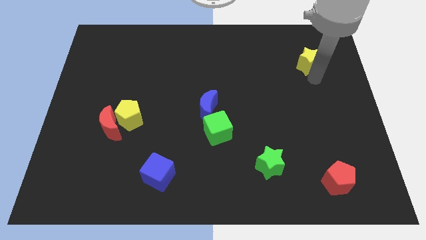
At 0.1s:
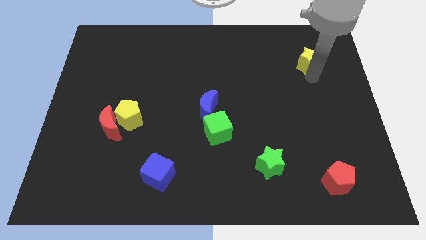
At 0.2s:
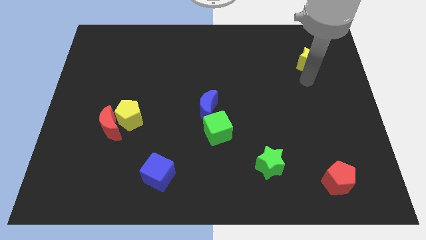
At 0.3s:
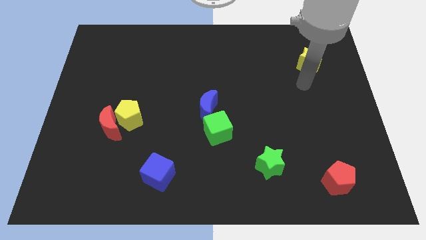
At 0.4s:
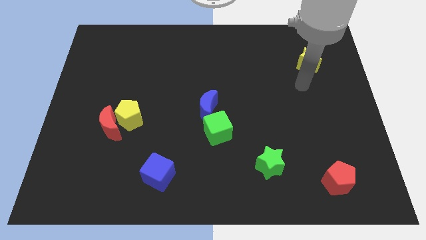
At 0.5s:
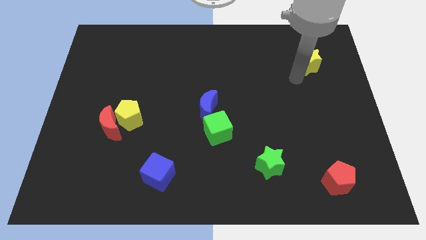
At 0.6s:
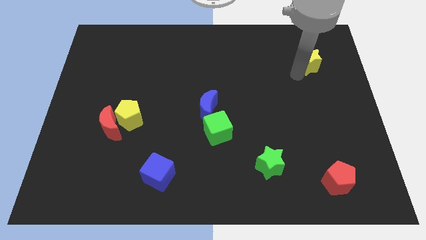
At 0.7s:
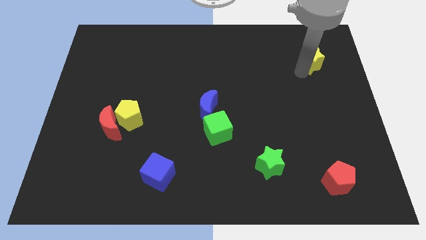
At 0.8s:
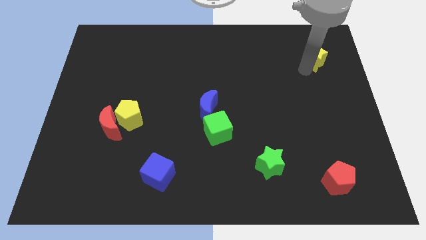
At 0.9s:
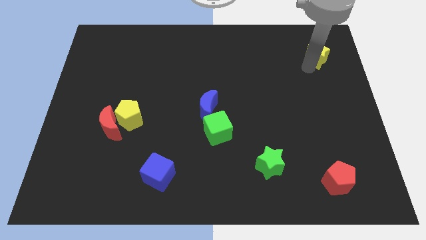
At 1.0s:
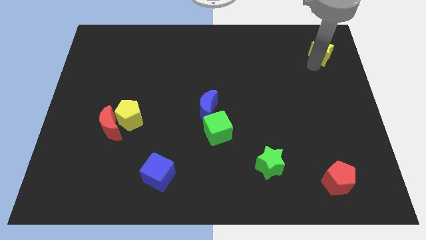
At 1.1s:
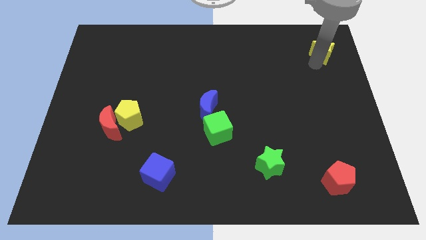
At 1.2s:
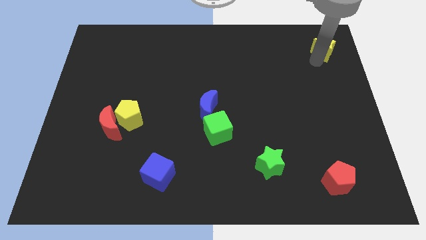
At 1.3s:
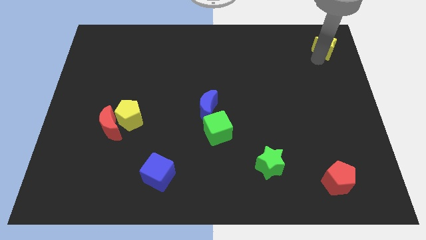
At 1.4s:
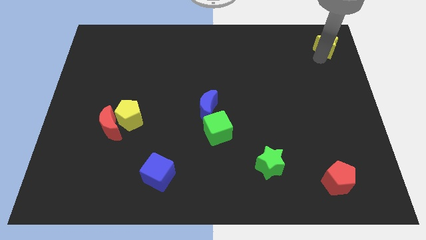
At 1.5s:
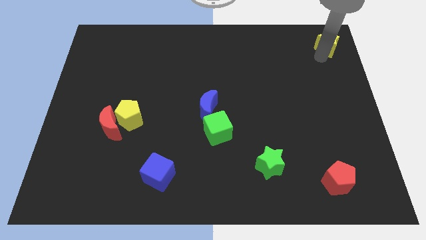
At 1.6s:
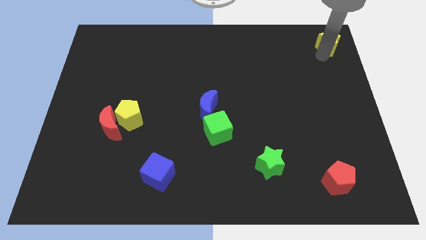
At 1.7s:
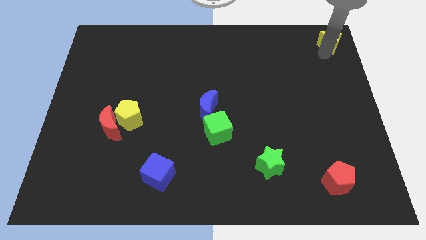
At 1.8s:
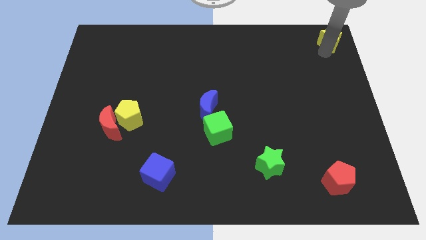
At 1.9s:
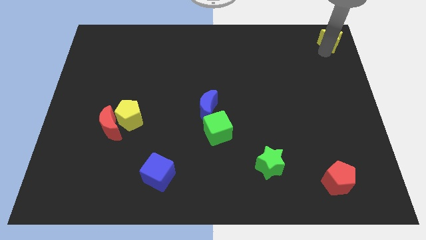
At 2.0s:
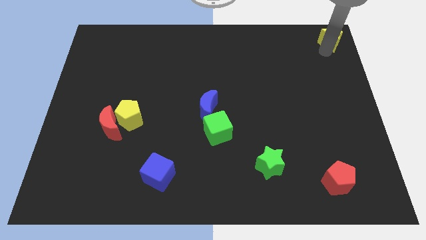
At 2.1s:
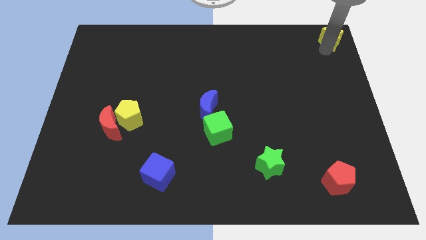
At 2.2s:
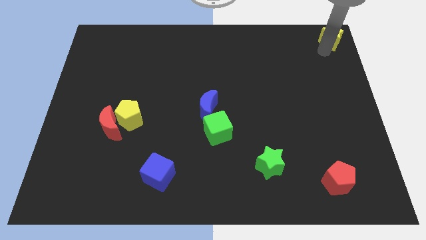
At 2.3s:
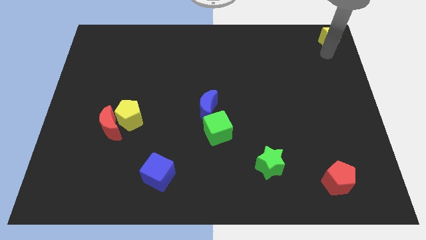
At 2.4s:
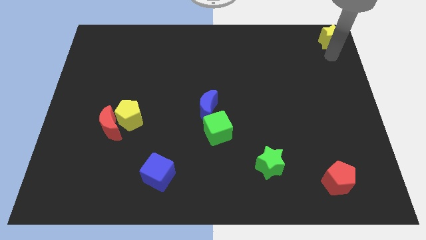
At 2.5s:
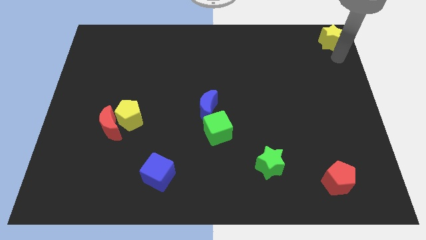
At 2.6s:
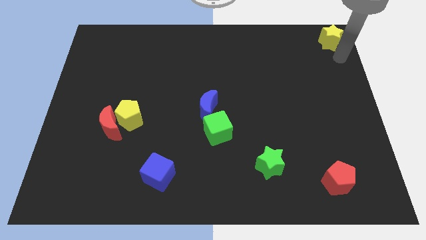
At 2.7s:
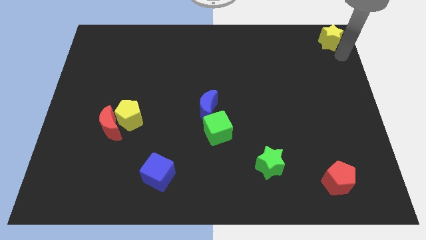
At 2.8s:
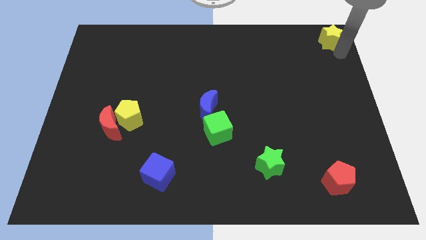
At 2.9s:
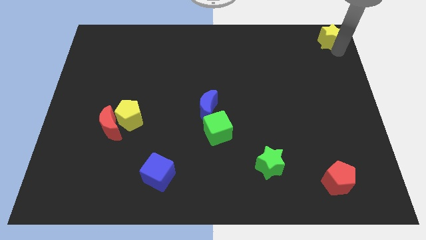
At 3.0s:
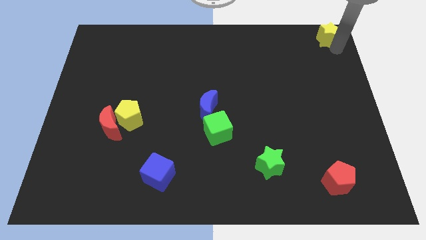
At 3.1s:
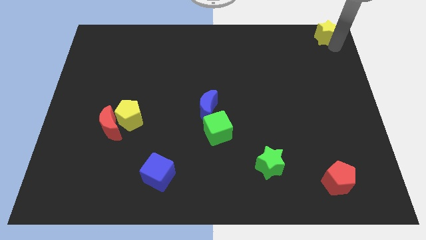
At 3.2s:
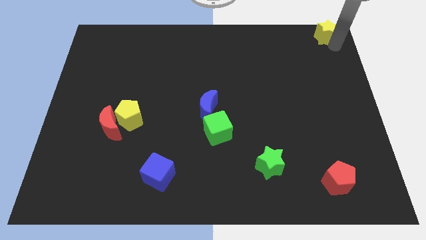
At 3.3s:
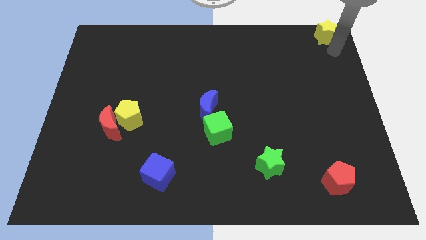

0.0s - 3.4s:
place the yellow pentagon towards the top right corner

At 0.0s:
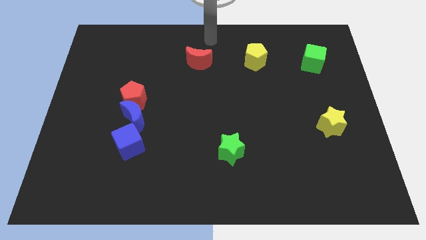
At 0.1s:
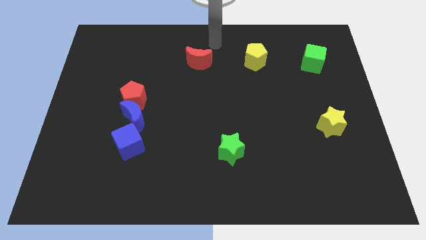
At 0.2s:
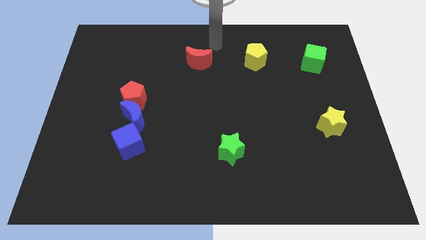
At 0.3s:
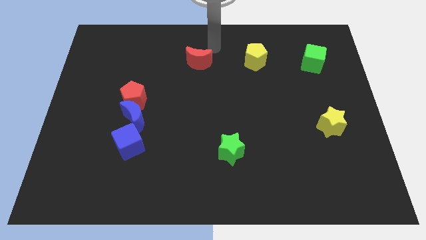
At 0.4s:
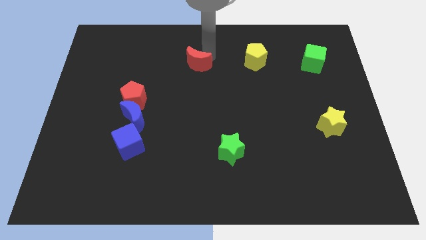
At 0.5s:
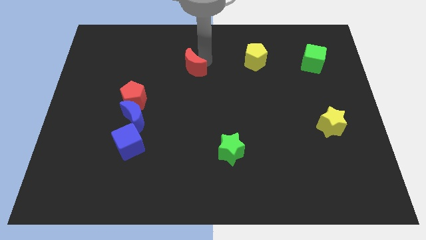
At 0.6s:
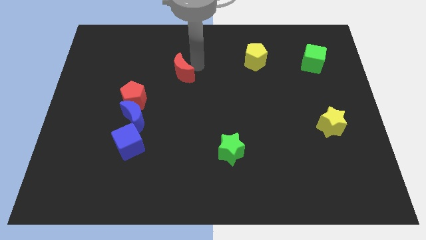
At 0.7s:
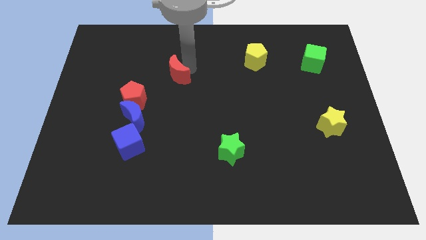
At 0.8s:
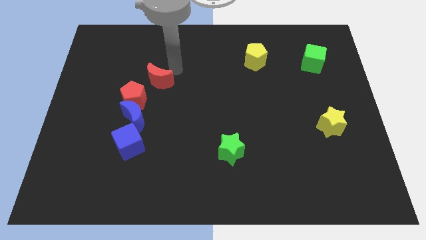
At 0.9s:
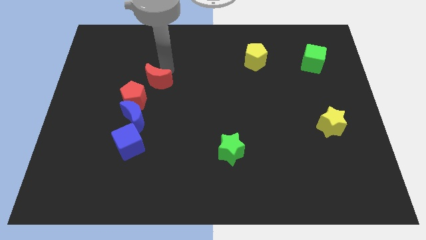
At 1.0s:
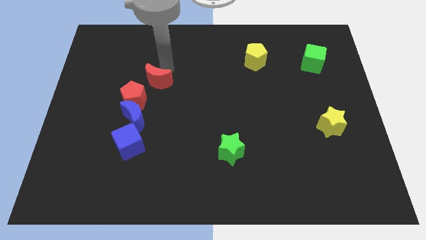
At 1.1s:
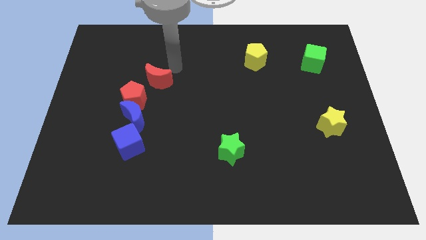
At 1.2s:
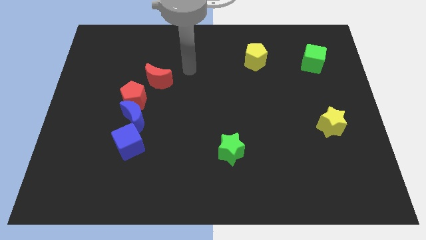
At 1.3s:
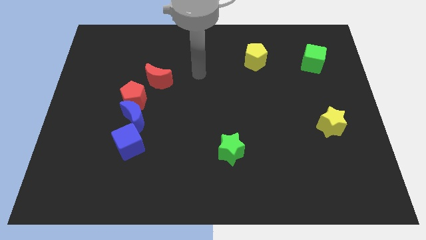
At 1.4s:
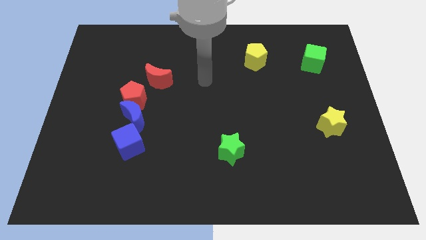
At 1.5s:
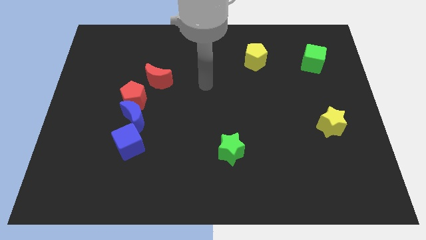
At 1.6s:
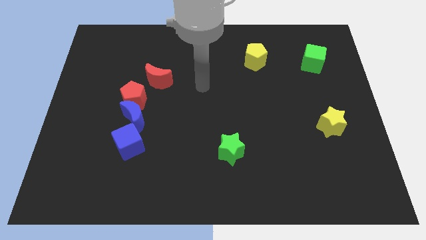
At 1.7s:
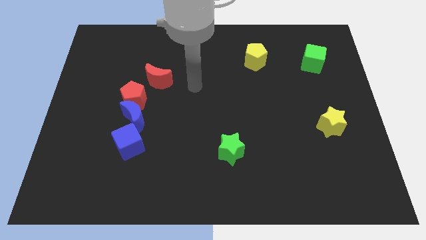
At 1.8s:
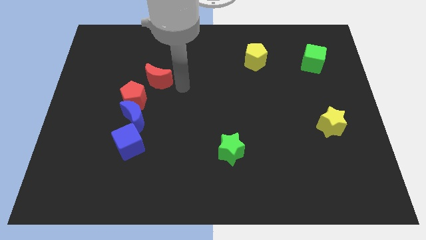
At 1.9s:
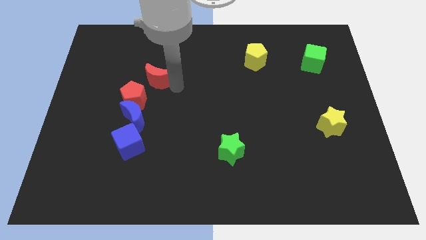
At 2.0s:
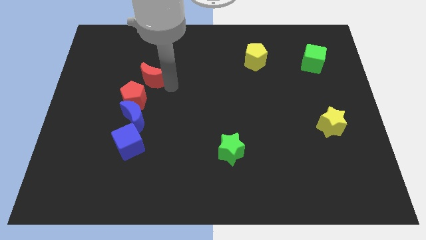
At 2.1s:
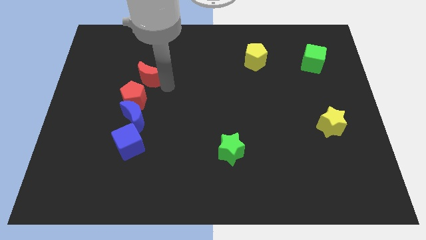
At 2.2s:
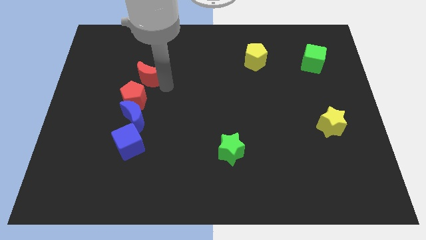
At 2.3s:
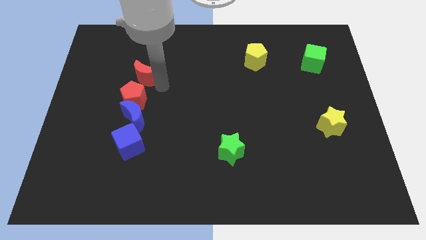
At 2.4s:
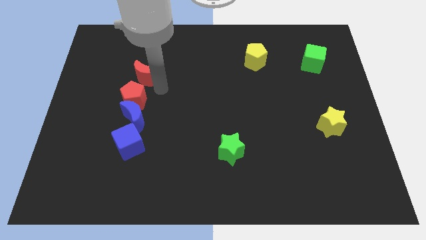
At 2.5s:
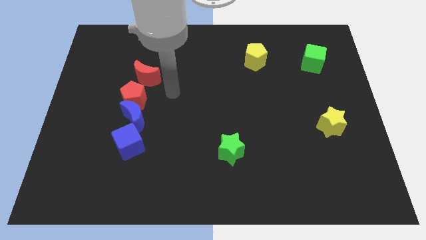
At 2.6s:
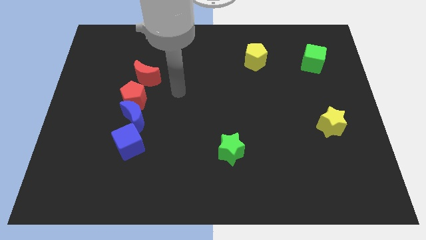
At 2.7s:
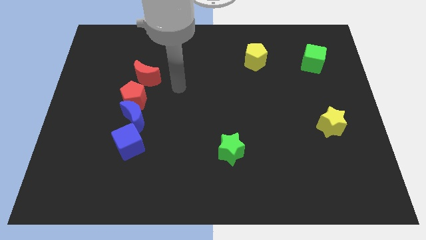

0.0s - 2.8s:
place the red moon above the red pentagon

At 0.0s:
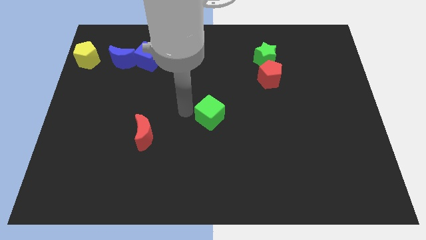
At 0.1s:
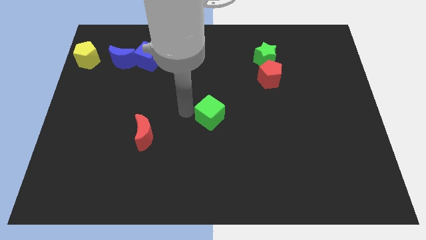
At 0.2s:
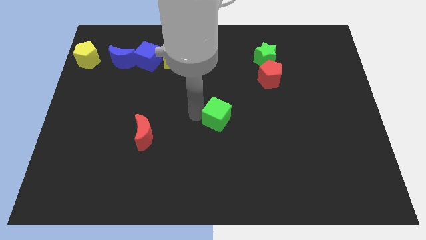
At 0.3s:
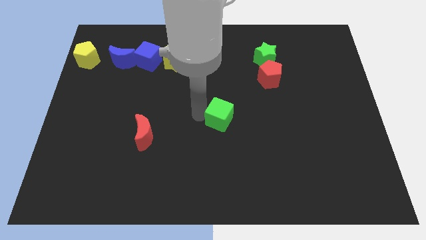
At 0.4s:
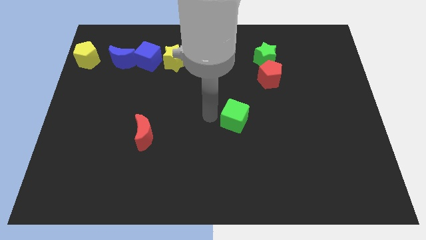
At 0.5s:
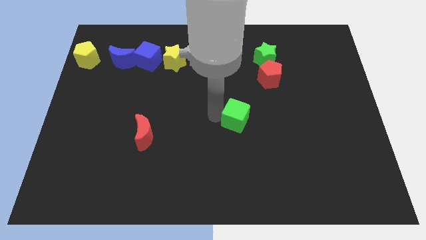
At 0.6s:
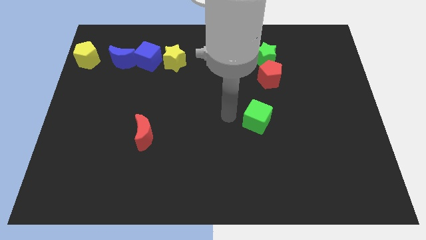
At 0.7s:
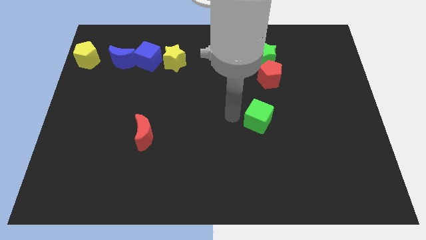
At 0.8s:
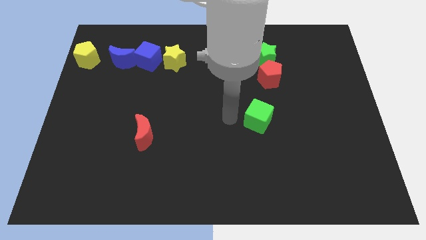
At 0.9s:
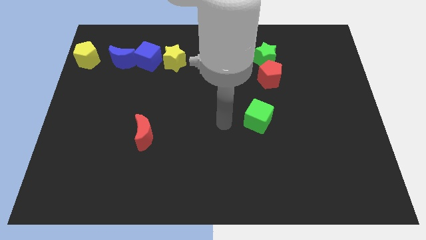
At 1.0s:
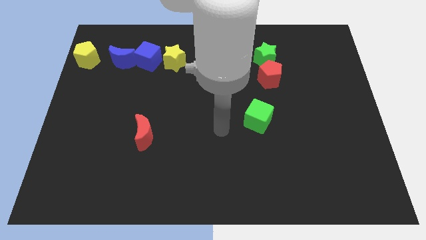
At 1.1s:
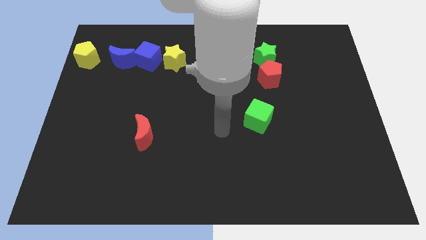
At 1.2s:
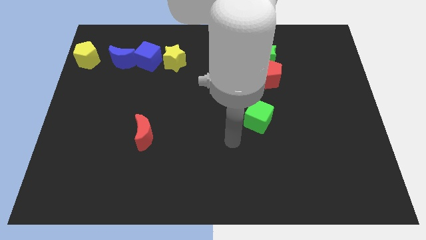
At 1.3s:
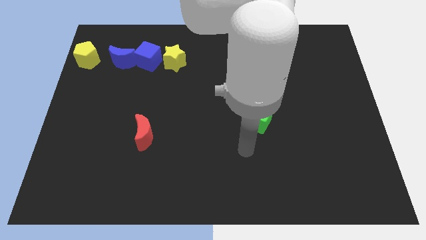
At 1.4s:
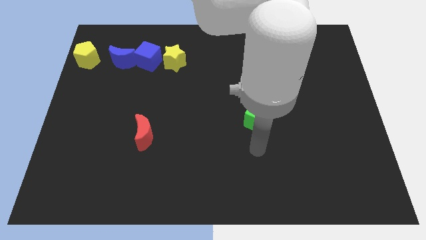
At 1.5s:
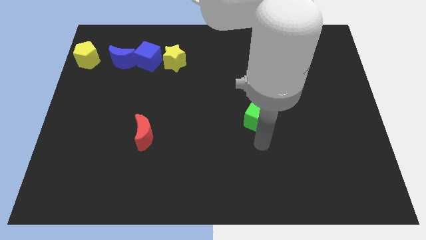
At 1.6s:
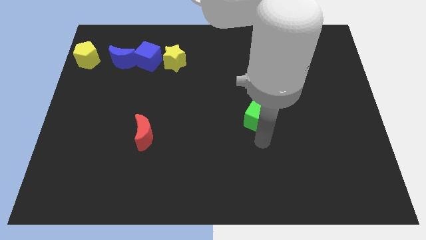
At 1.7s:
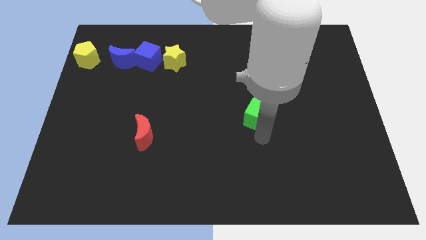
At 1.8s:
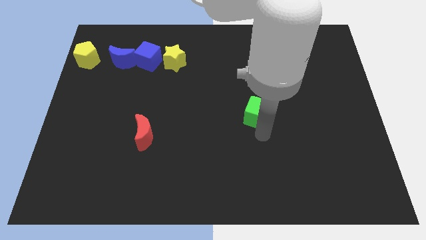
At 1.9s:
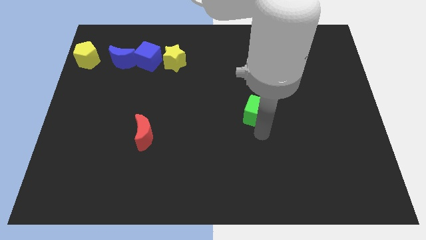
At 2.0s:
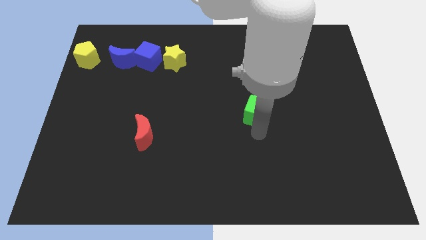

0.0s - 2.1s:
move the green cube below the red pentagon diagonally

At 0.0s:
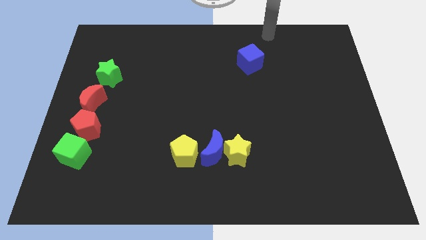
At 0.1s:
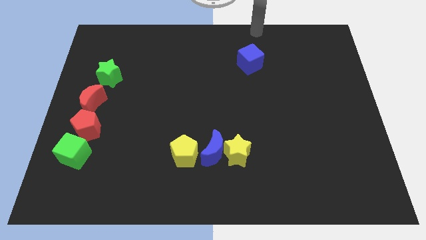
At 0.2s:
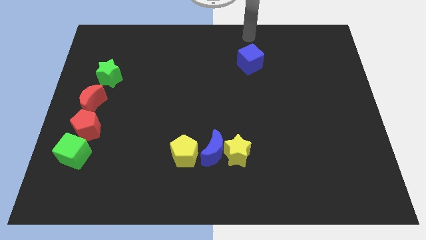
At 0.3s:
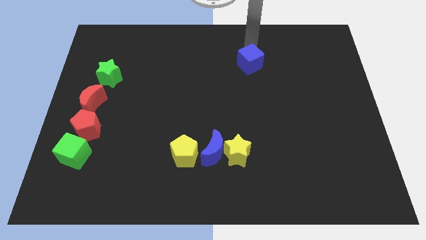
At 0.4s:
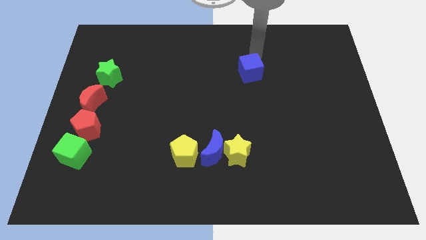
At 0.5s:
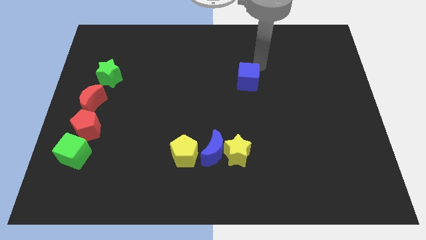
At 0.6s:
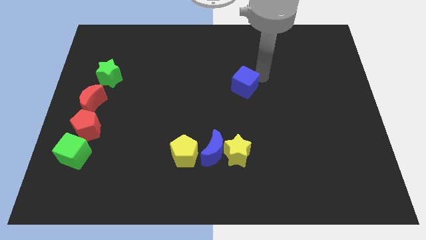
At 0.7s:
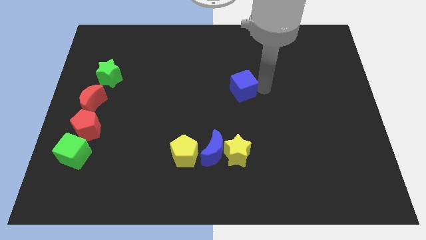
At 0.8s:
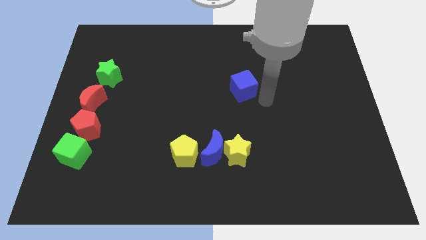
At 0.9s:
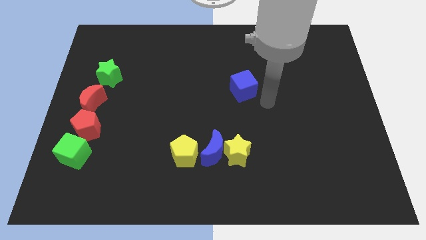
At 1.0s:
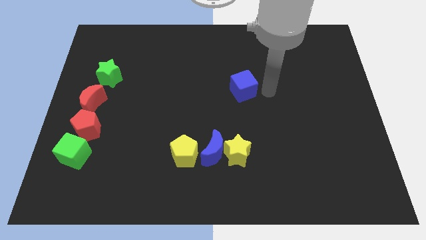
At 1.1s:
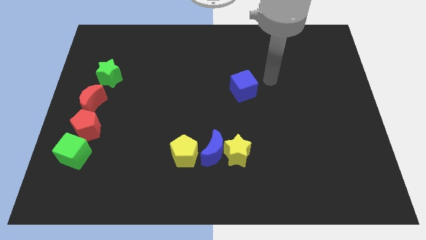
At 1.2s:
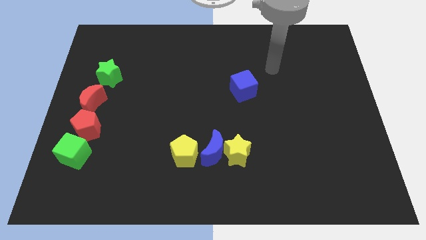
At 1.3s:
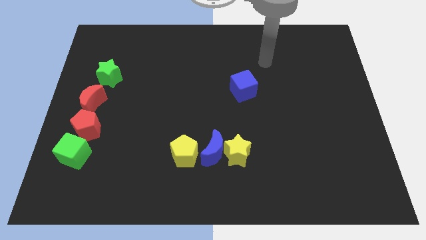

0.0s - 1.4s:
move the blue cube towards the bottom side
